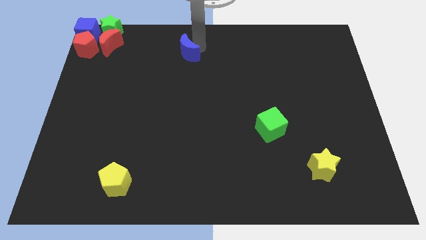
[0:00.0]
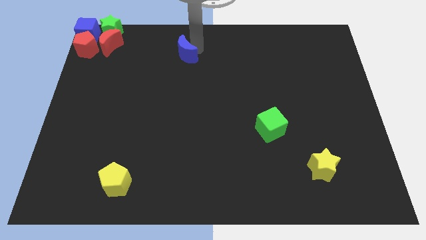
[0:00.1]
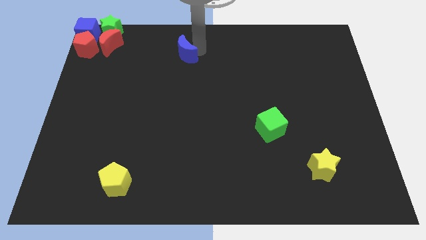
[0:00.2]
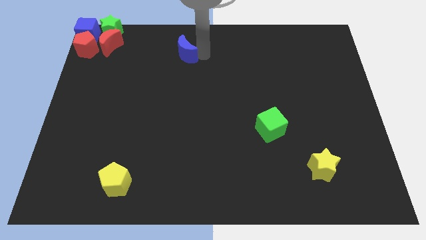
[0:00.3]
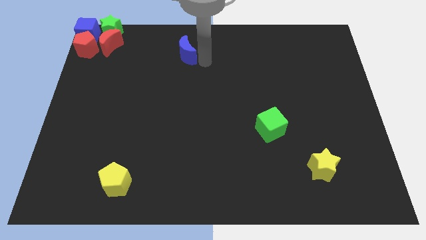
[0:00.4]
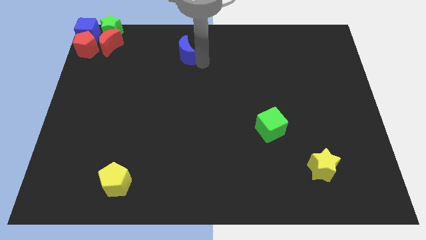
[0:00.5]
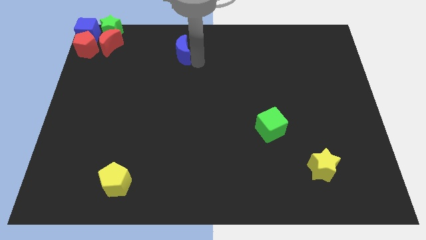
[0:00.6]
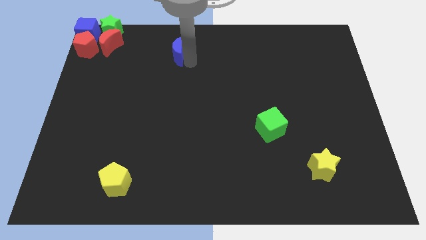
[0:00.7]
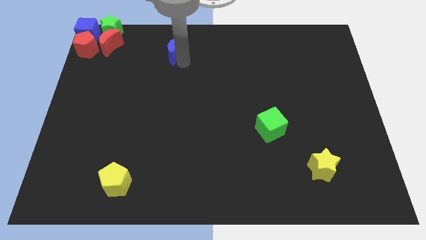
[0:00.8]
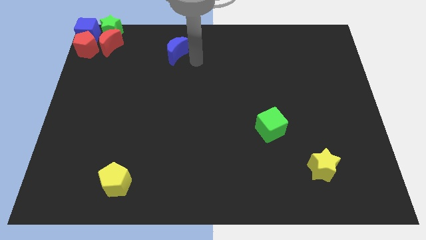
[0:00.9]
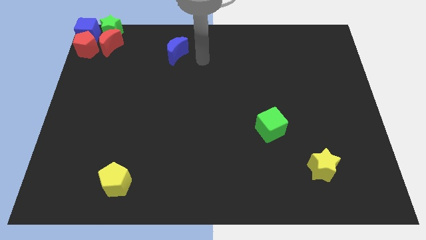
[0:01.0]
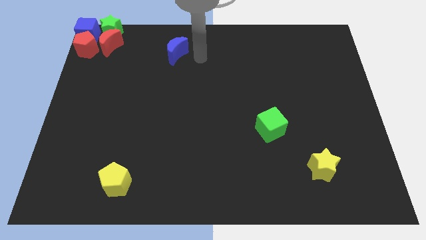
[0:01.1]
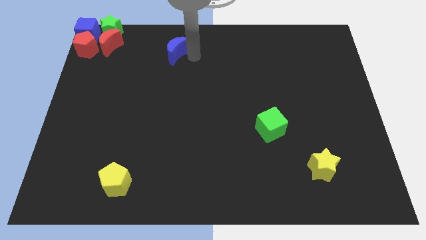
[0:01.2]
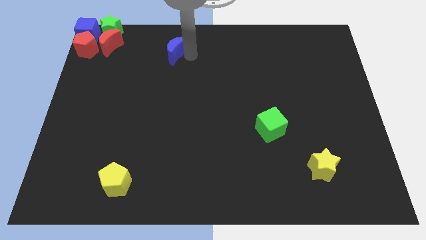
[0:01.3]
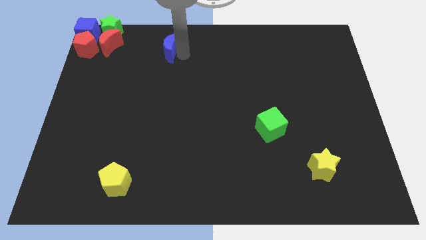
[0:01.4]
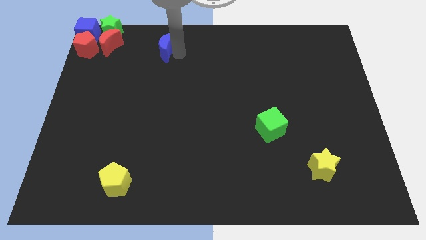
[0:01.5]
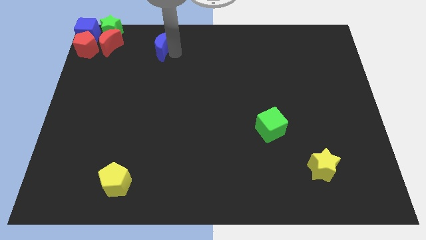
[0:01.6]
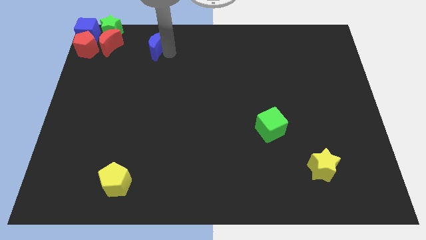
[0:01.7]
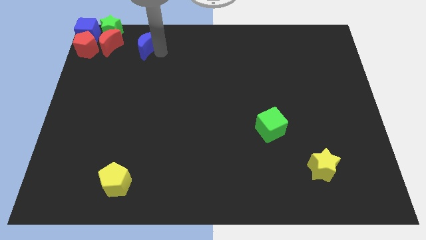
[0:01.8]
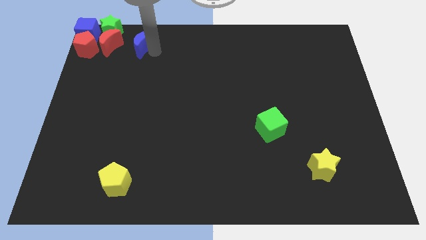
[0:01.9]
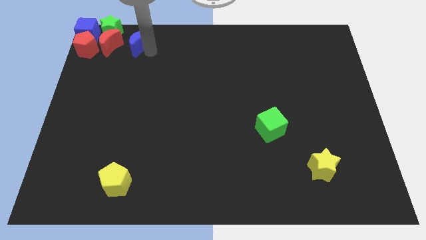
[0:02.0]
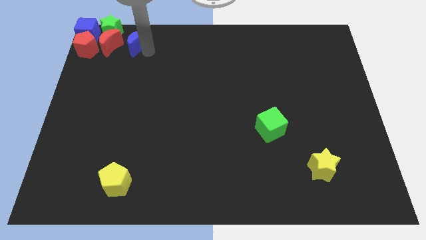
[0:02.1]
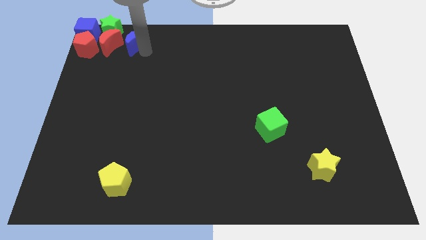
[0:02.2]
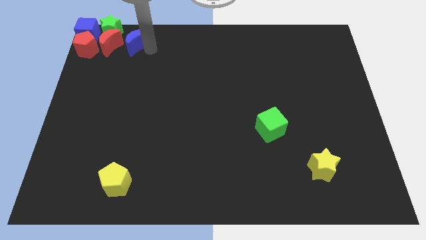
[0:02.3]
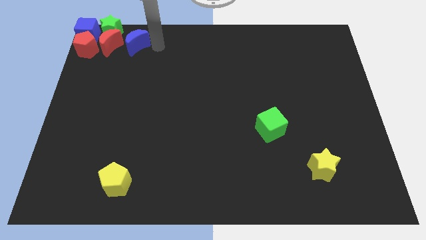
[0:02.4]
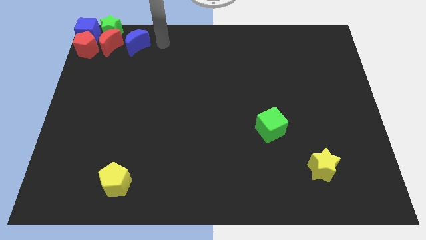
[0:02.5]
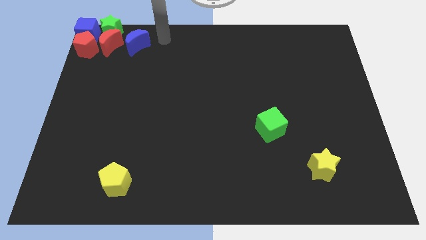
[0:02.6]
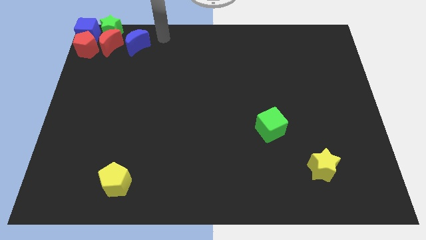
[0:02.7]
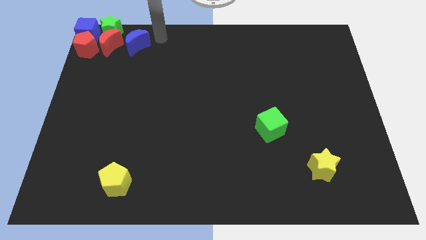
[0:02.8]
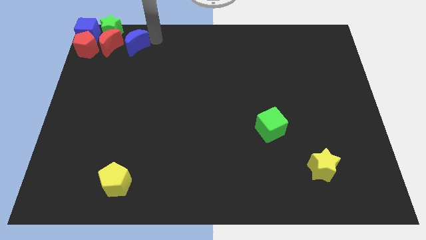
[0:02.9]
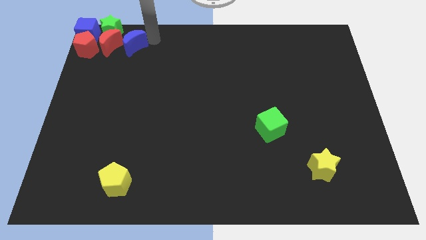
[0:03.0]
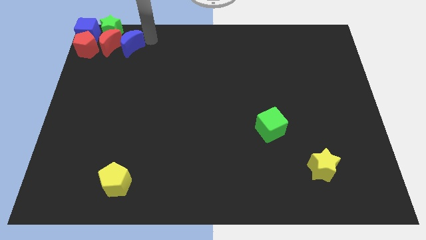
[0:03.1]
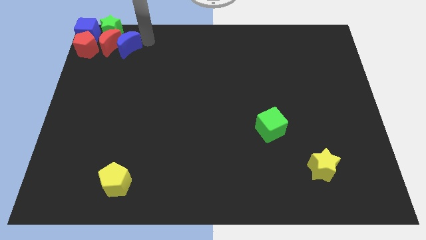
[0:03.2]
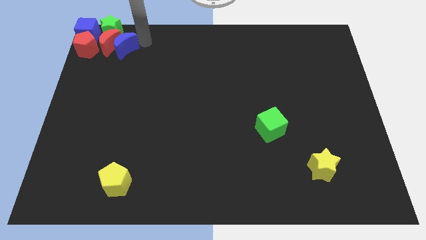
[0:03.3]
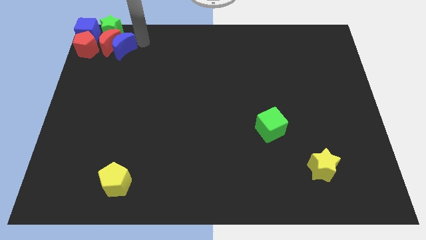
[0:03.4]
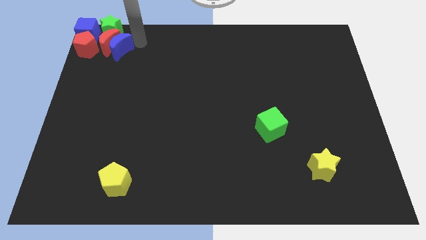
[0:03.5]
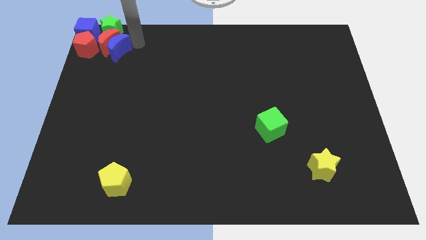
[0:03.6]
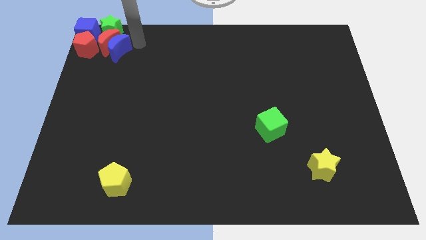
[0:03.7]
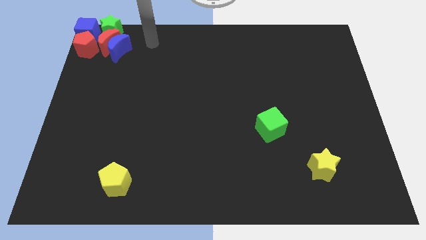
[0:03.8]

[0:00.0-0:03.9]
push the blue moon into the red moon

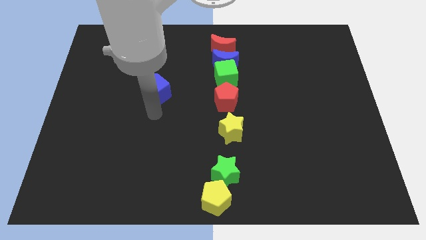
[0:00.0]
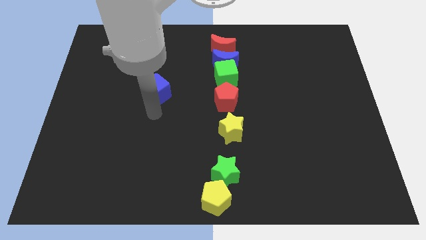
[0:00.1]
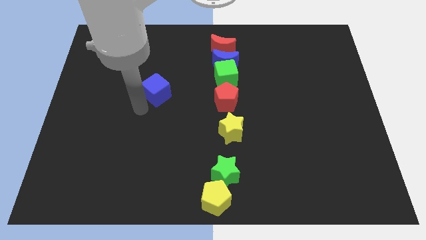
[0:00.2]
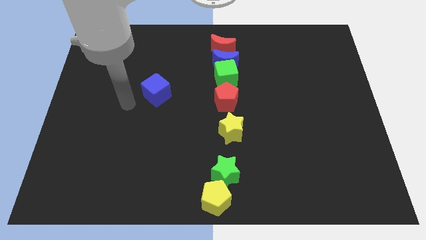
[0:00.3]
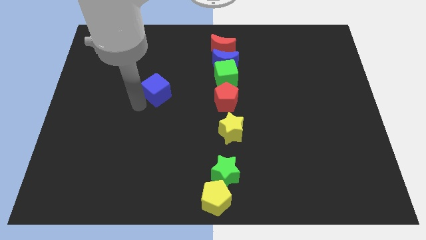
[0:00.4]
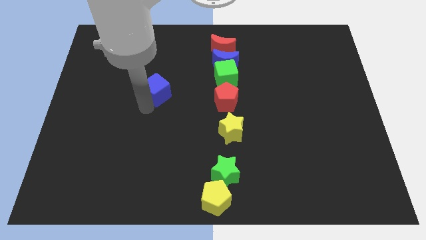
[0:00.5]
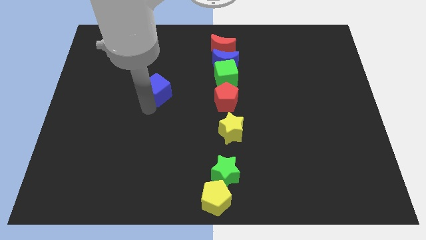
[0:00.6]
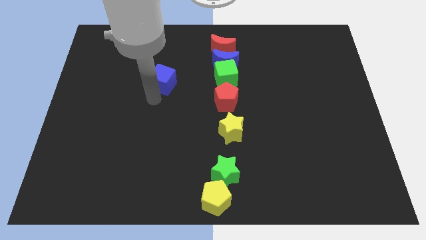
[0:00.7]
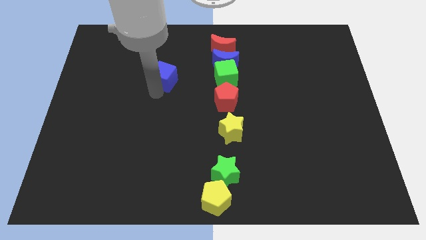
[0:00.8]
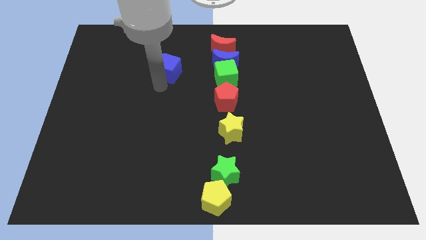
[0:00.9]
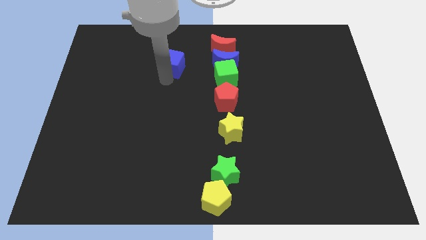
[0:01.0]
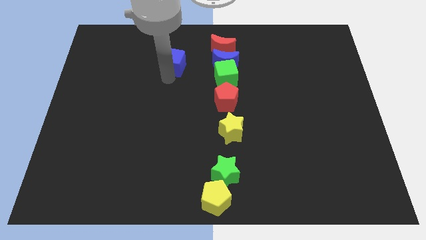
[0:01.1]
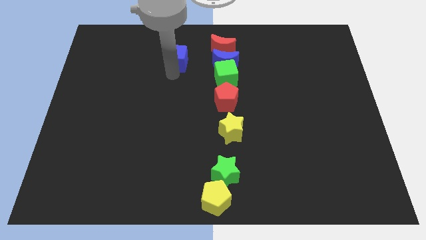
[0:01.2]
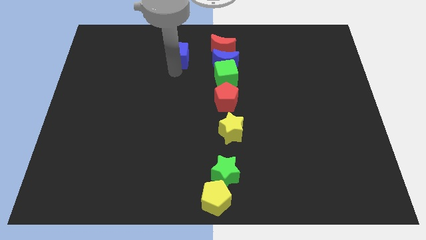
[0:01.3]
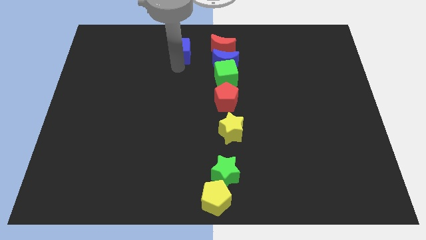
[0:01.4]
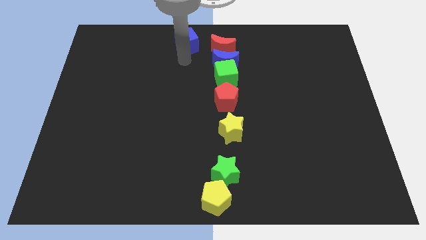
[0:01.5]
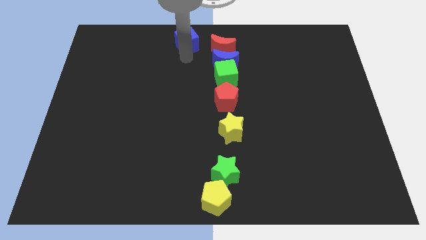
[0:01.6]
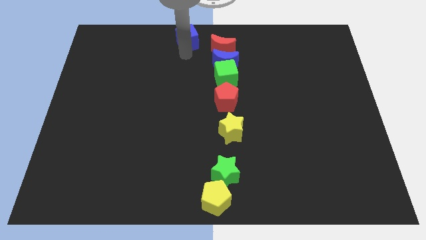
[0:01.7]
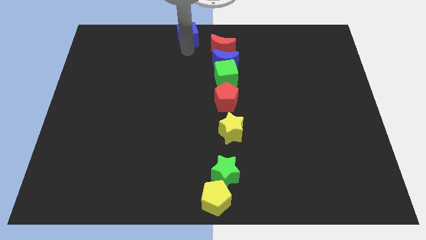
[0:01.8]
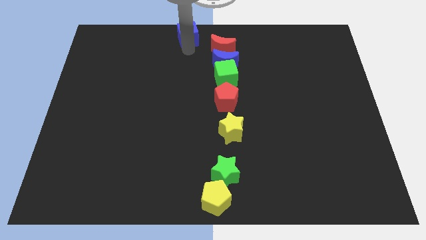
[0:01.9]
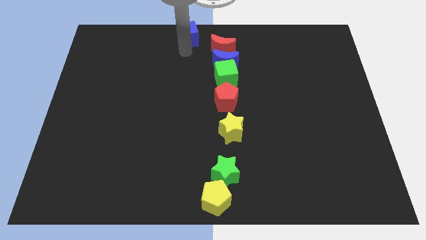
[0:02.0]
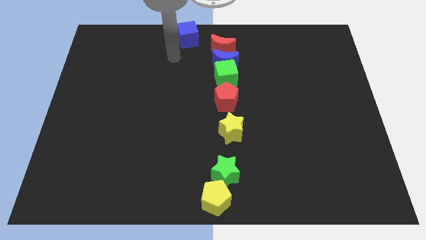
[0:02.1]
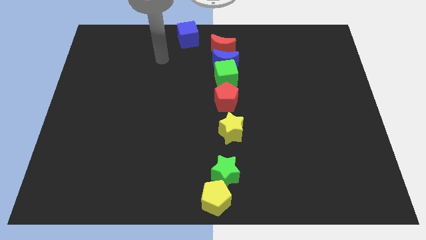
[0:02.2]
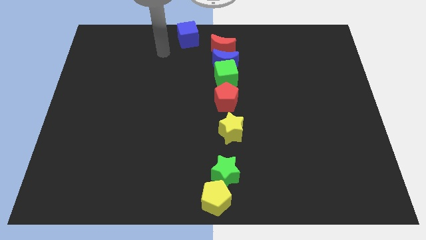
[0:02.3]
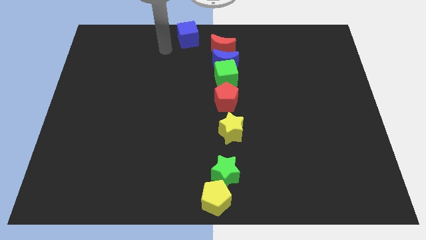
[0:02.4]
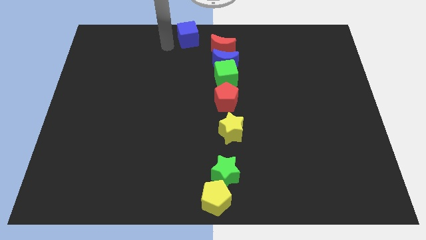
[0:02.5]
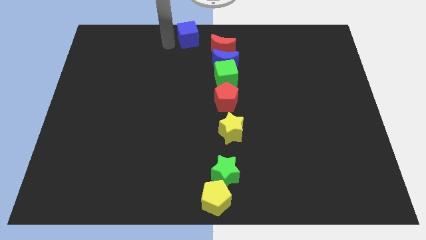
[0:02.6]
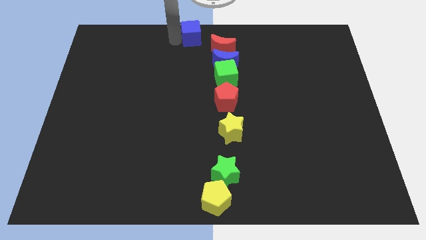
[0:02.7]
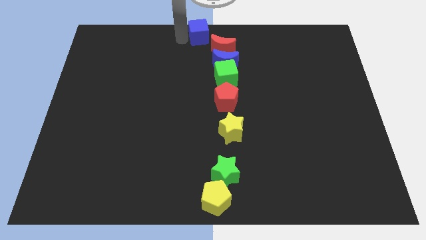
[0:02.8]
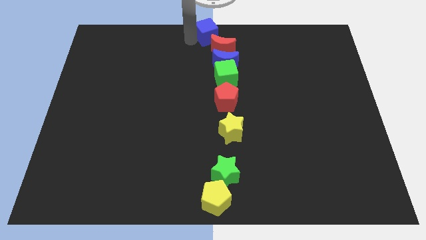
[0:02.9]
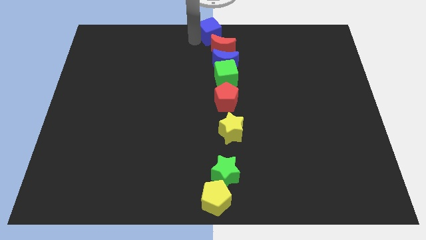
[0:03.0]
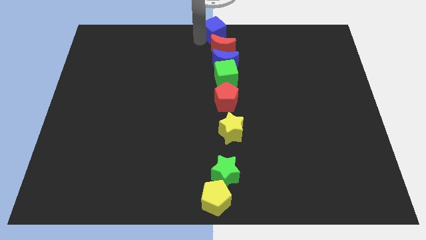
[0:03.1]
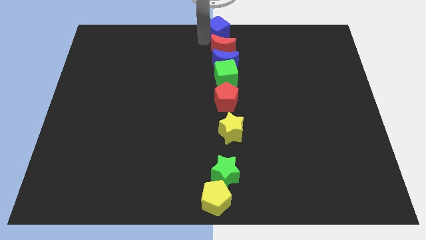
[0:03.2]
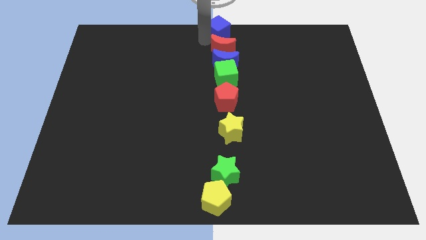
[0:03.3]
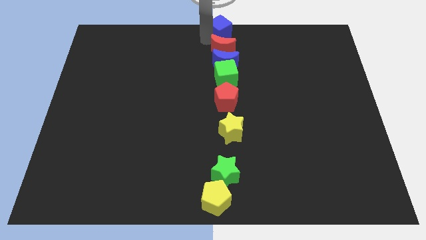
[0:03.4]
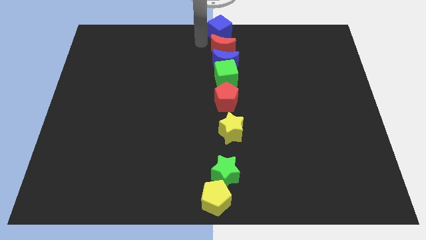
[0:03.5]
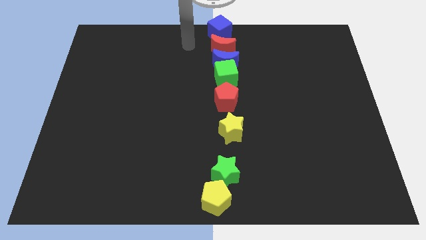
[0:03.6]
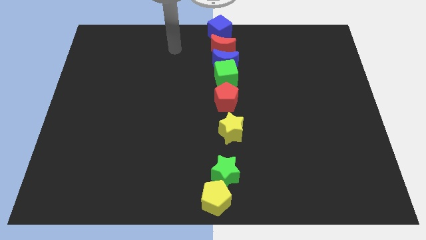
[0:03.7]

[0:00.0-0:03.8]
place the blue cube at the top center of the board

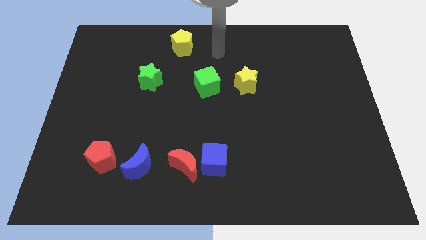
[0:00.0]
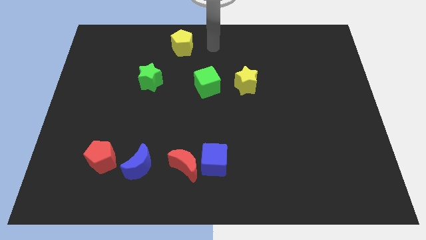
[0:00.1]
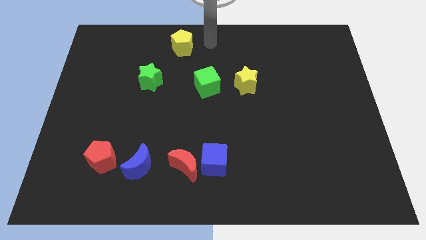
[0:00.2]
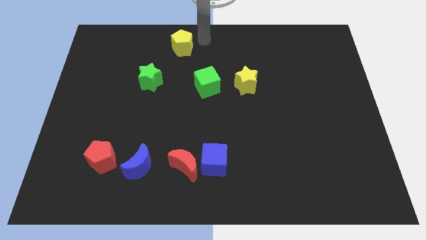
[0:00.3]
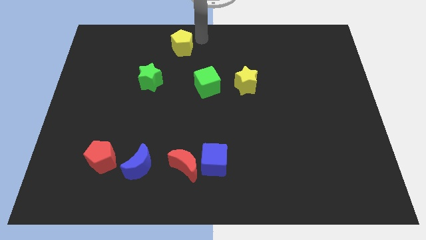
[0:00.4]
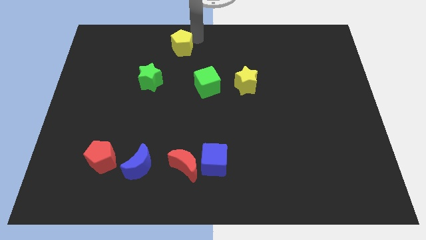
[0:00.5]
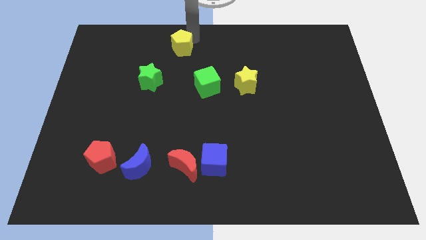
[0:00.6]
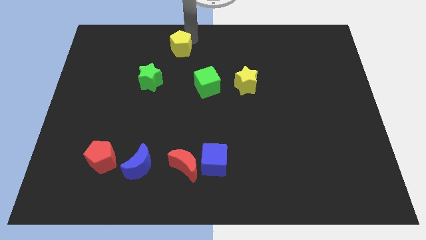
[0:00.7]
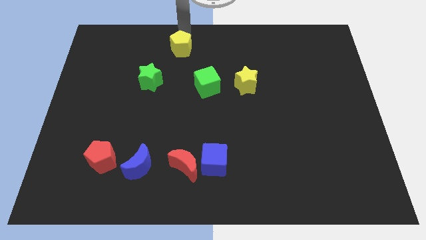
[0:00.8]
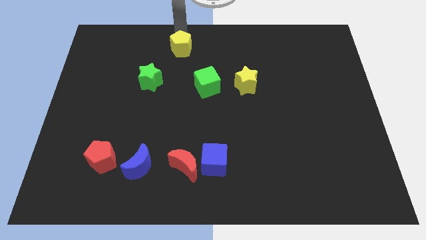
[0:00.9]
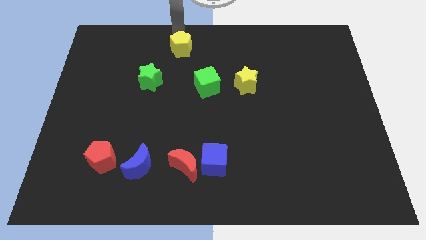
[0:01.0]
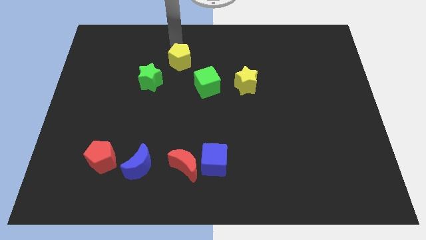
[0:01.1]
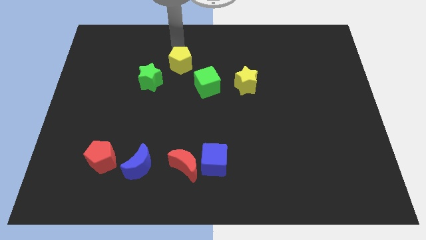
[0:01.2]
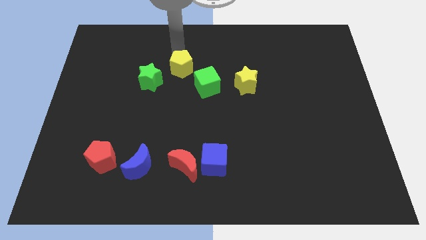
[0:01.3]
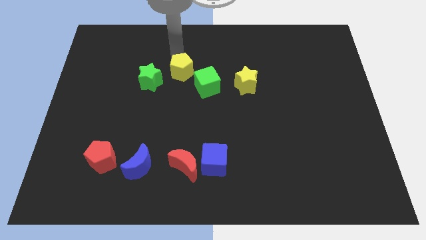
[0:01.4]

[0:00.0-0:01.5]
move the yellow pentagon towards the bottom
